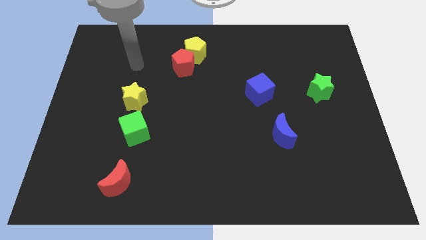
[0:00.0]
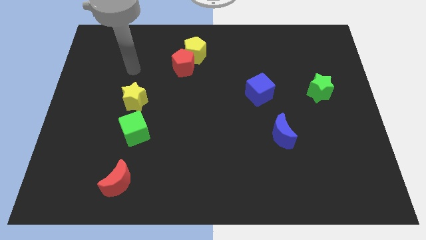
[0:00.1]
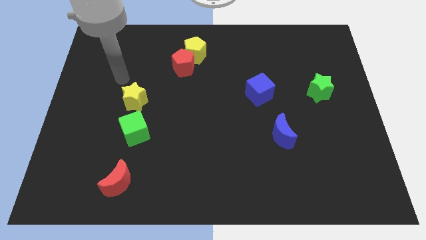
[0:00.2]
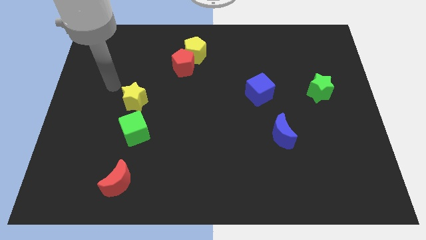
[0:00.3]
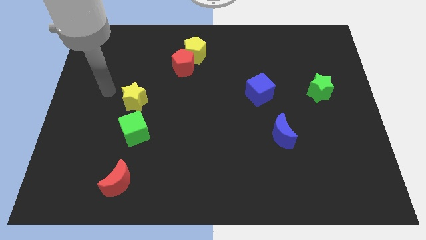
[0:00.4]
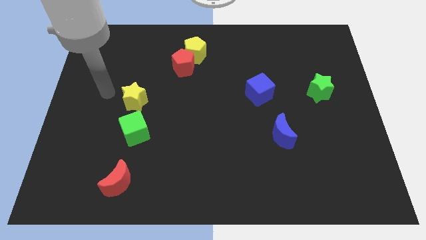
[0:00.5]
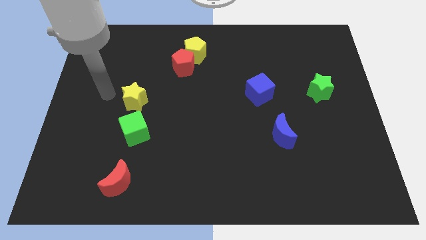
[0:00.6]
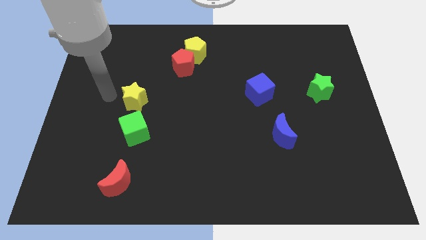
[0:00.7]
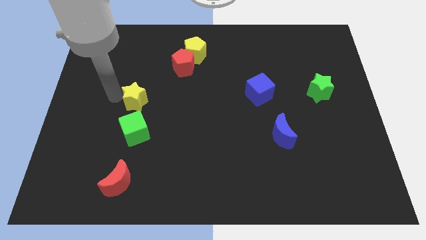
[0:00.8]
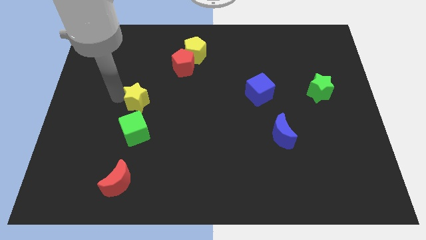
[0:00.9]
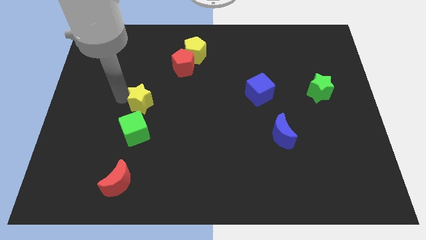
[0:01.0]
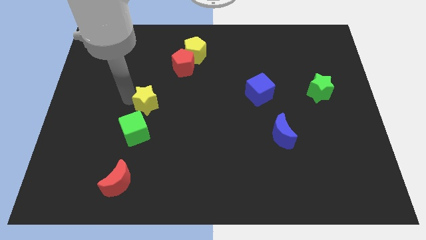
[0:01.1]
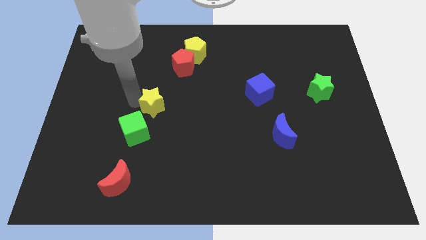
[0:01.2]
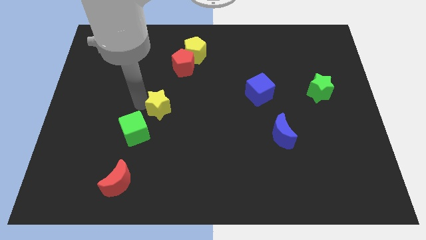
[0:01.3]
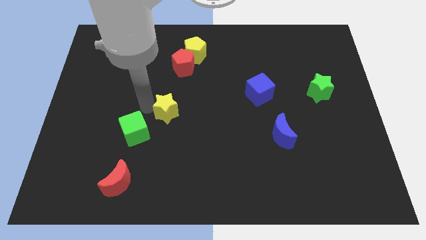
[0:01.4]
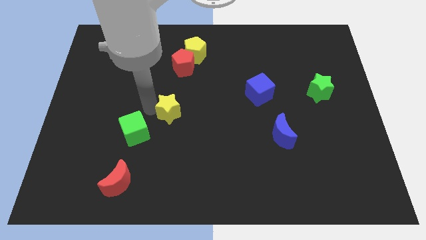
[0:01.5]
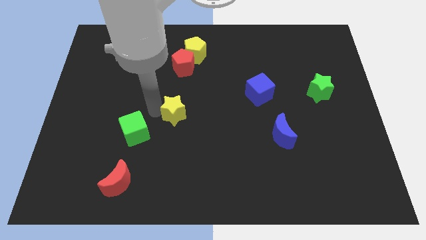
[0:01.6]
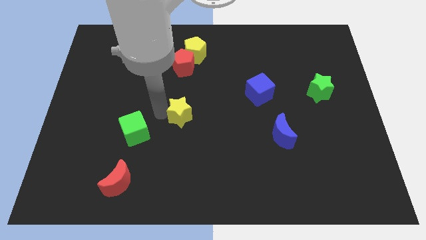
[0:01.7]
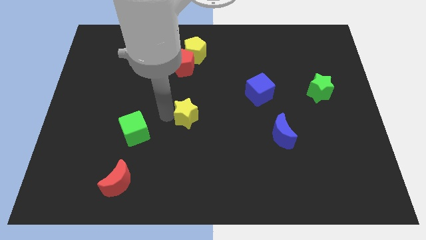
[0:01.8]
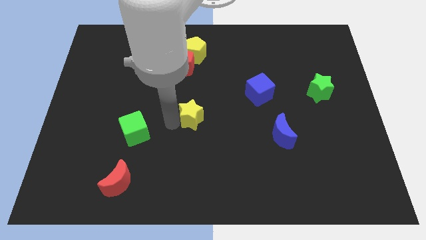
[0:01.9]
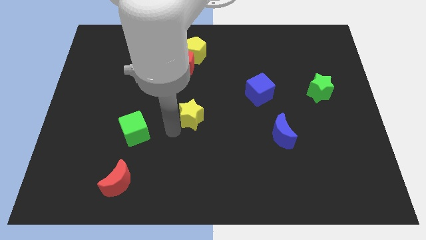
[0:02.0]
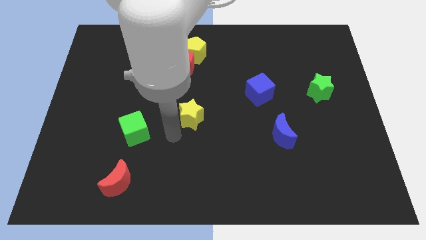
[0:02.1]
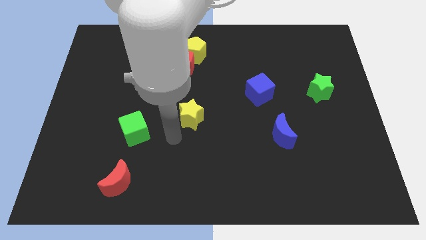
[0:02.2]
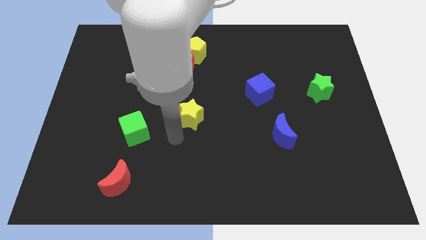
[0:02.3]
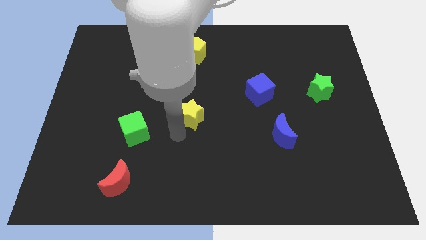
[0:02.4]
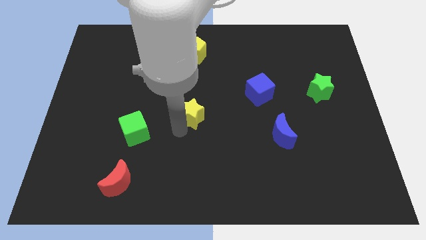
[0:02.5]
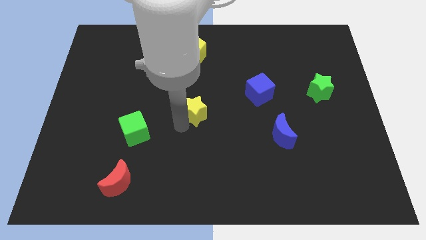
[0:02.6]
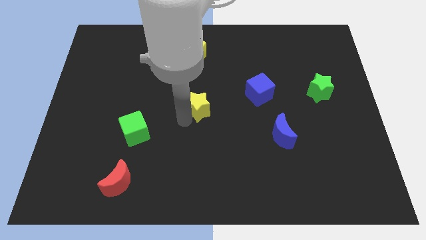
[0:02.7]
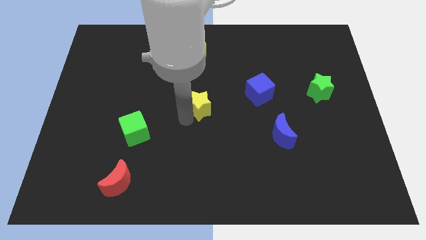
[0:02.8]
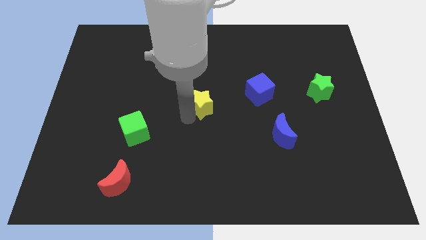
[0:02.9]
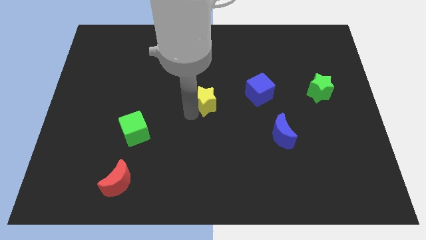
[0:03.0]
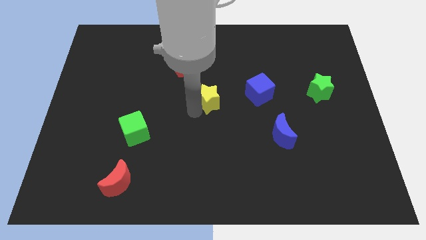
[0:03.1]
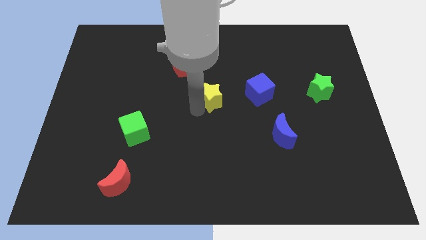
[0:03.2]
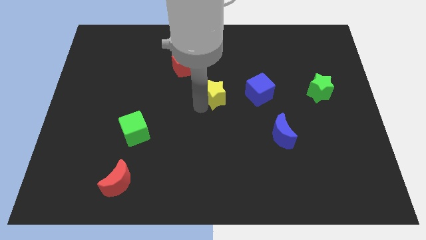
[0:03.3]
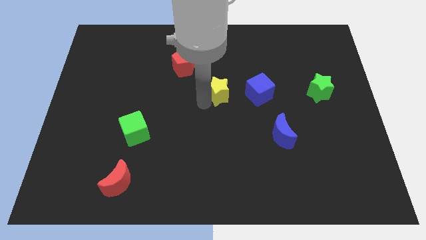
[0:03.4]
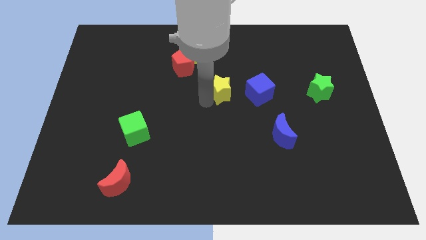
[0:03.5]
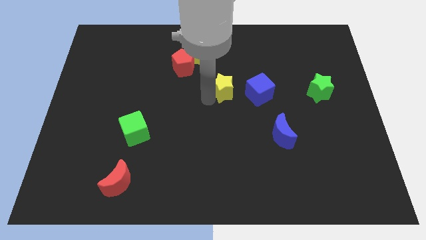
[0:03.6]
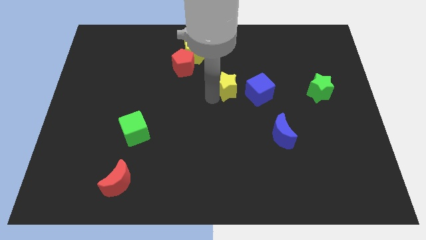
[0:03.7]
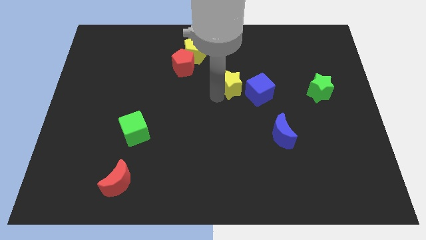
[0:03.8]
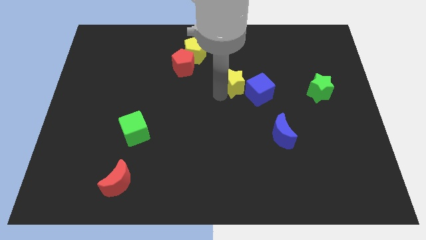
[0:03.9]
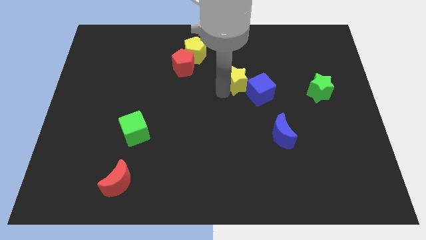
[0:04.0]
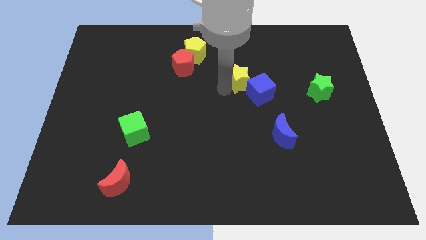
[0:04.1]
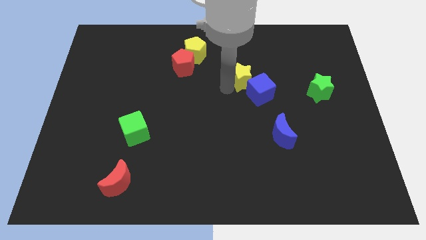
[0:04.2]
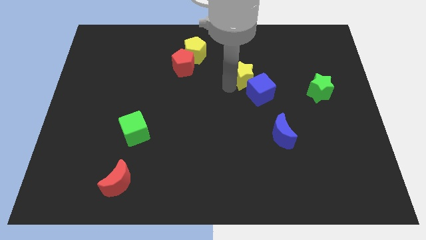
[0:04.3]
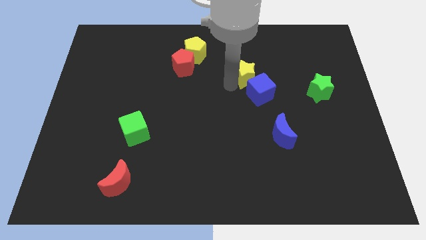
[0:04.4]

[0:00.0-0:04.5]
put the yellow star next to the blue cube

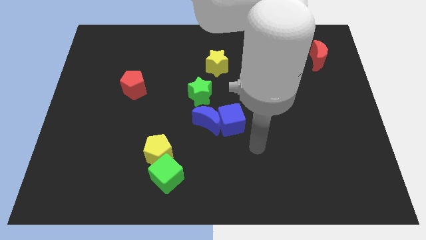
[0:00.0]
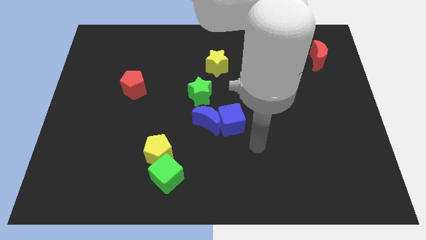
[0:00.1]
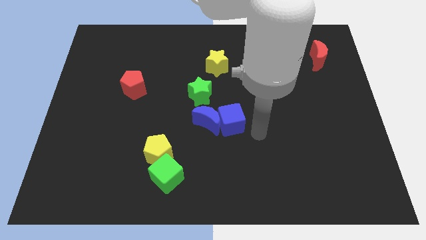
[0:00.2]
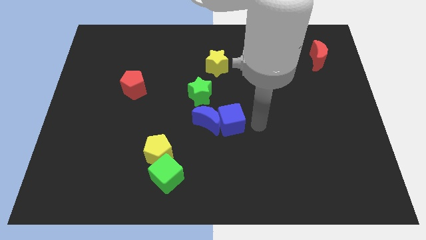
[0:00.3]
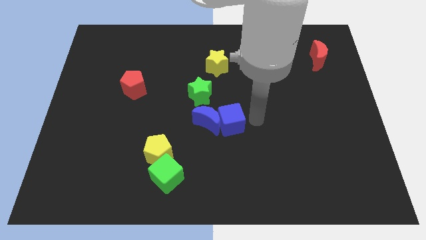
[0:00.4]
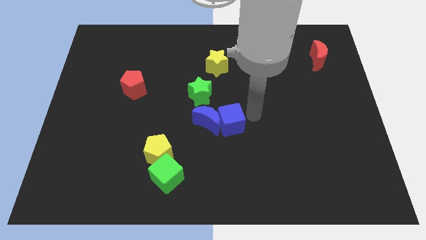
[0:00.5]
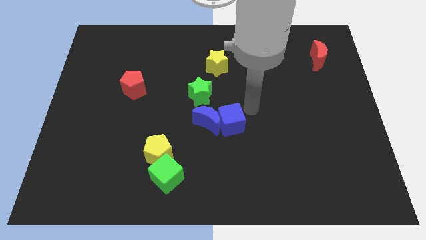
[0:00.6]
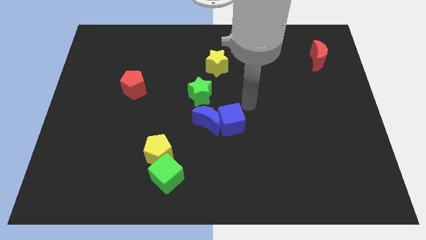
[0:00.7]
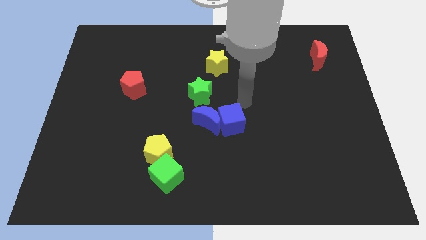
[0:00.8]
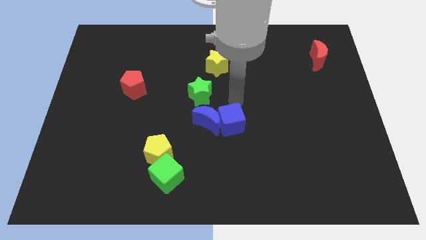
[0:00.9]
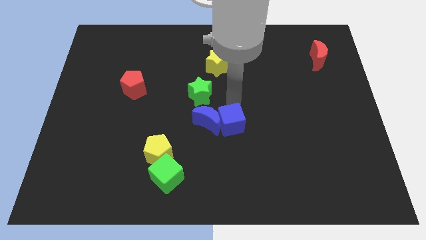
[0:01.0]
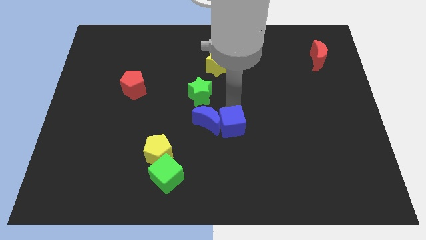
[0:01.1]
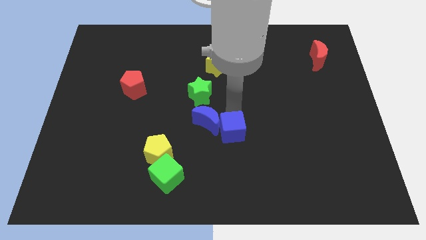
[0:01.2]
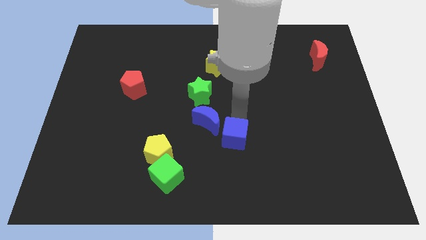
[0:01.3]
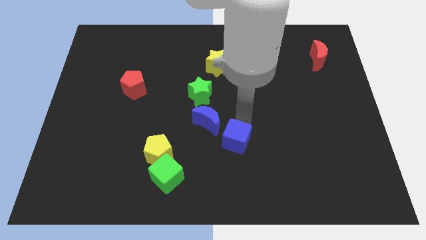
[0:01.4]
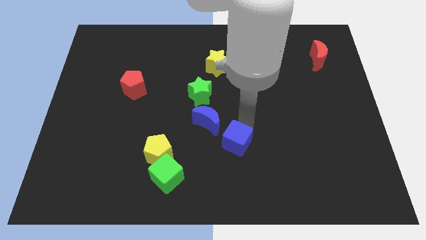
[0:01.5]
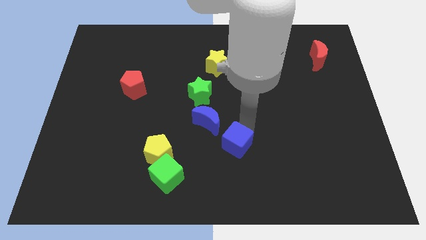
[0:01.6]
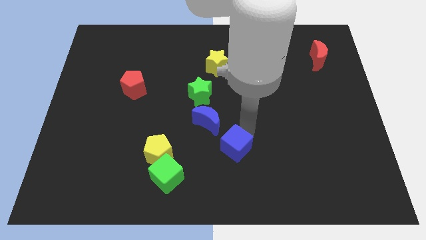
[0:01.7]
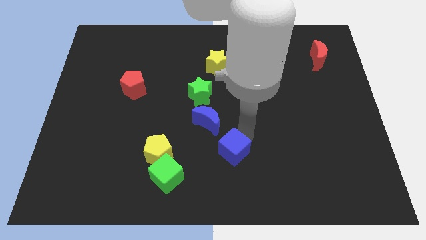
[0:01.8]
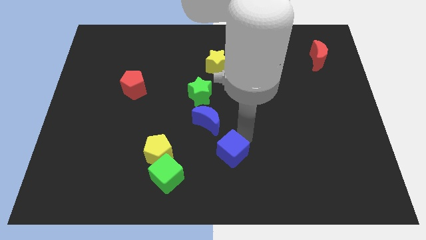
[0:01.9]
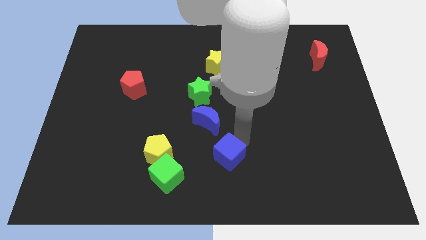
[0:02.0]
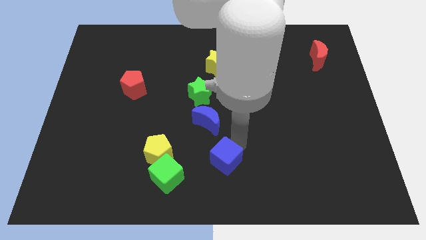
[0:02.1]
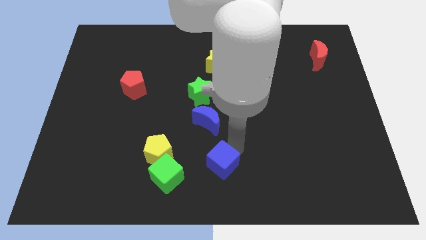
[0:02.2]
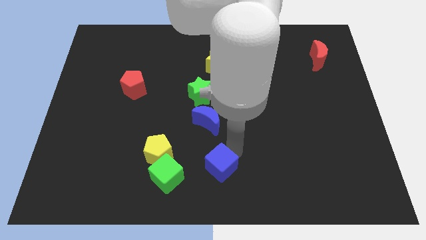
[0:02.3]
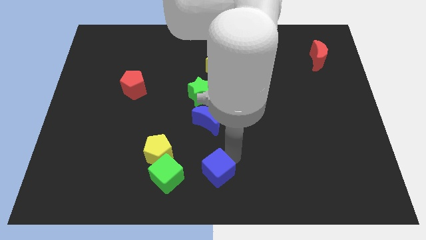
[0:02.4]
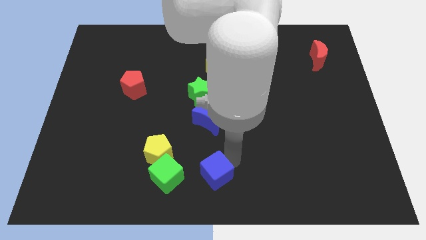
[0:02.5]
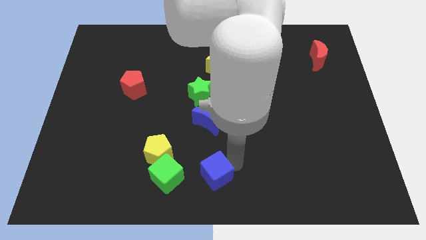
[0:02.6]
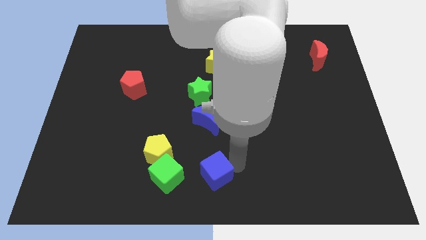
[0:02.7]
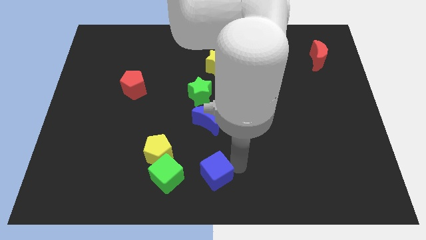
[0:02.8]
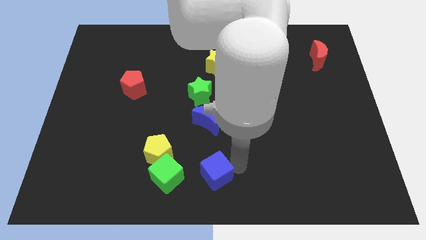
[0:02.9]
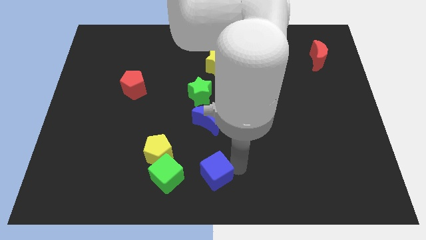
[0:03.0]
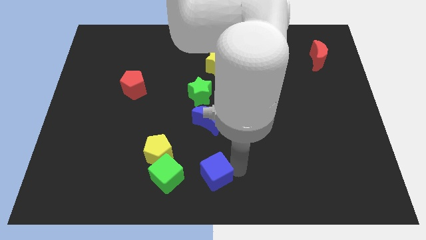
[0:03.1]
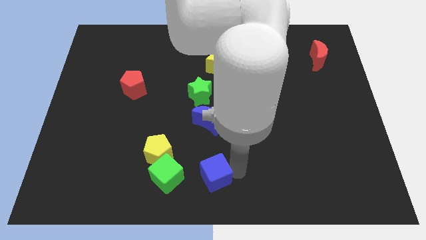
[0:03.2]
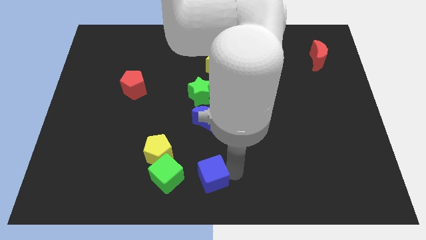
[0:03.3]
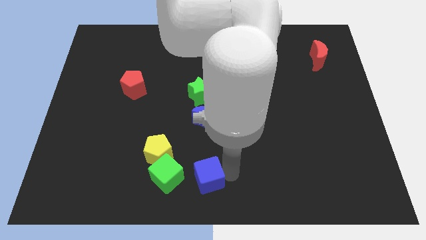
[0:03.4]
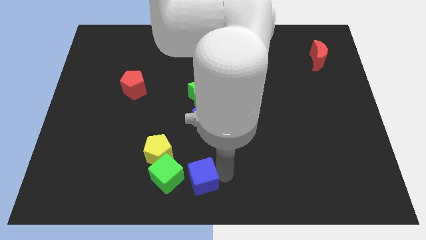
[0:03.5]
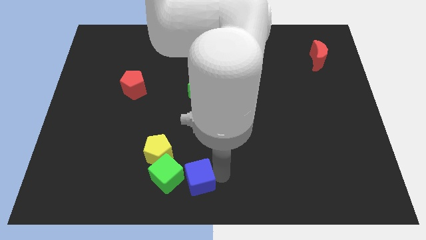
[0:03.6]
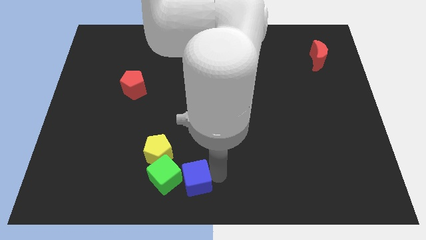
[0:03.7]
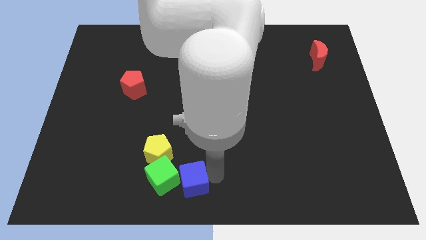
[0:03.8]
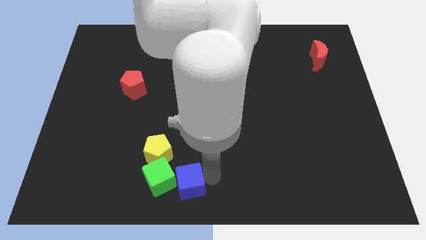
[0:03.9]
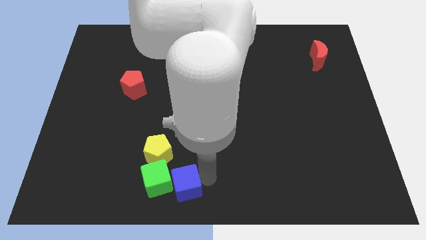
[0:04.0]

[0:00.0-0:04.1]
slide the blue cube towards the green cube

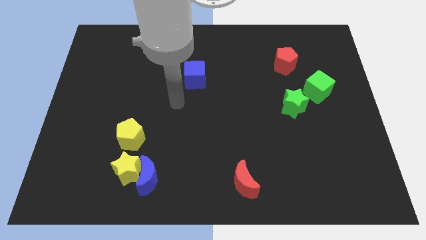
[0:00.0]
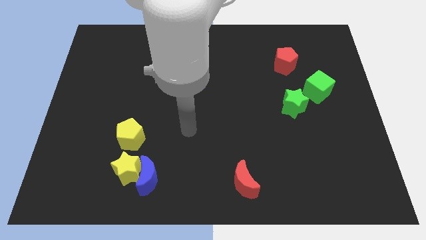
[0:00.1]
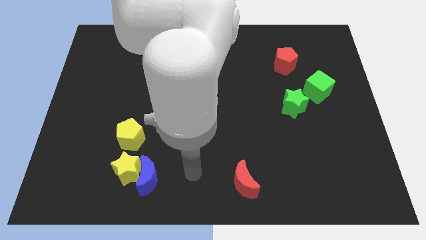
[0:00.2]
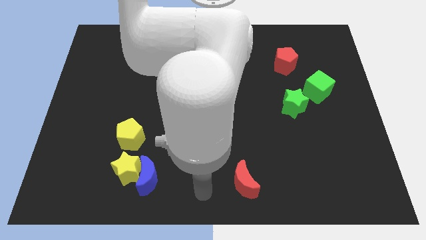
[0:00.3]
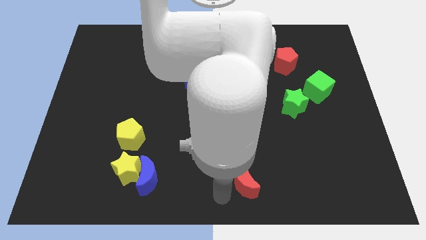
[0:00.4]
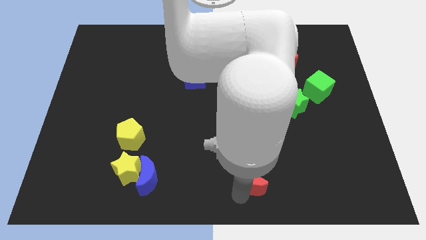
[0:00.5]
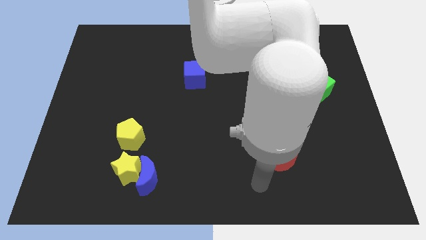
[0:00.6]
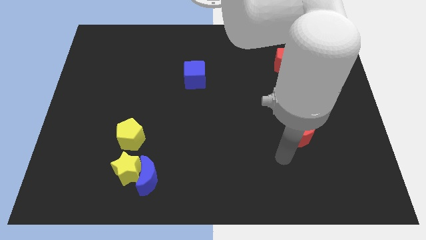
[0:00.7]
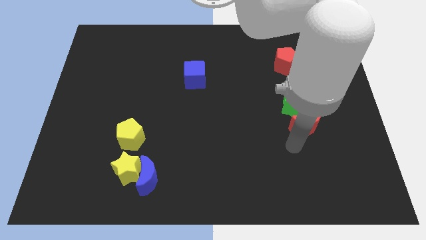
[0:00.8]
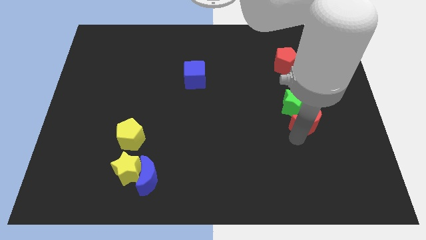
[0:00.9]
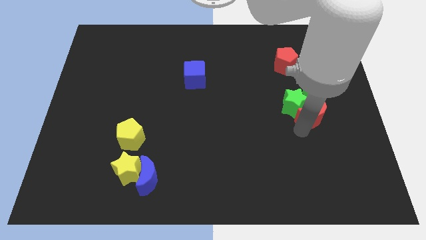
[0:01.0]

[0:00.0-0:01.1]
slide the red moon towards the green star
